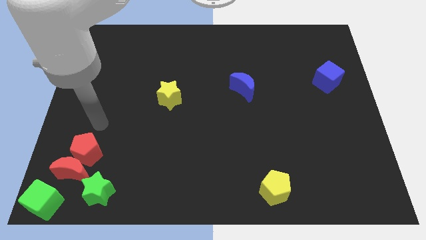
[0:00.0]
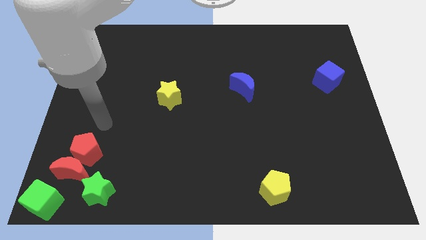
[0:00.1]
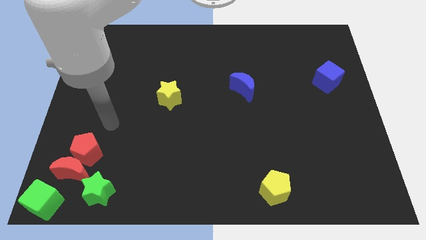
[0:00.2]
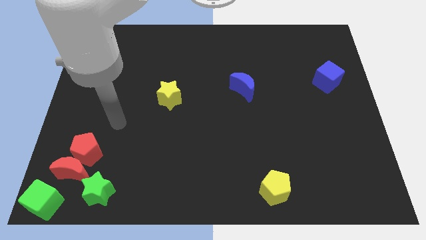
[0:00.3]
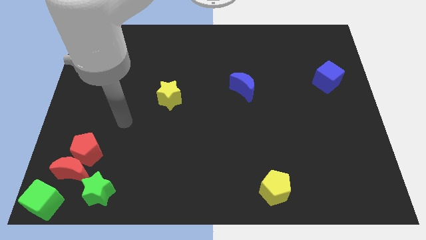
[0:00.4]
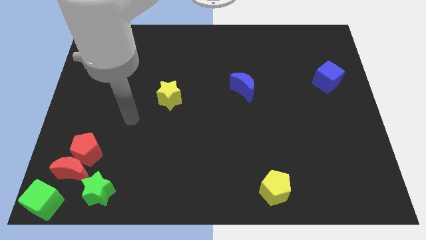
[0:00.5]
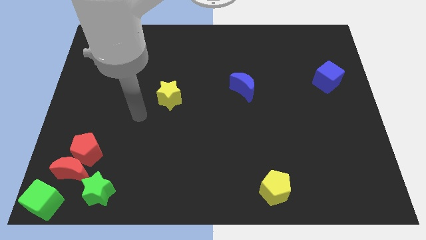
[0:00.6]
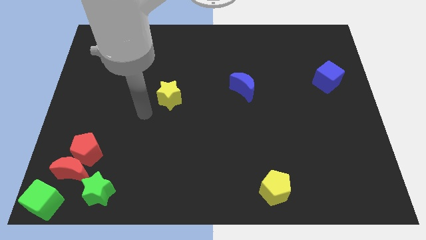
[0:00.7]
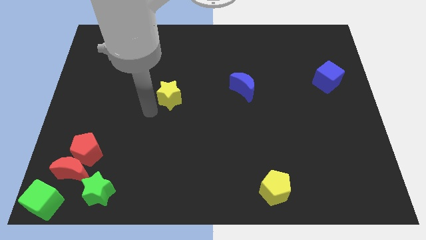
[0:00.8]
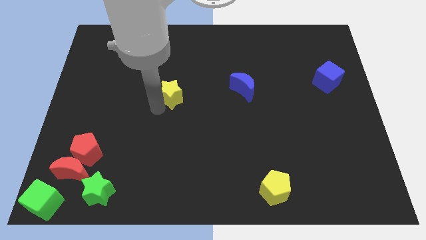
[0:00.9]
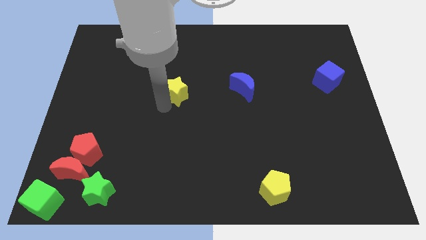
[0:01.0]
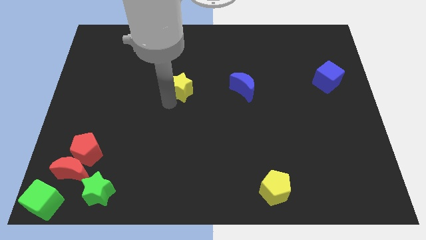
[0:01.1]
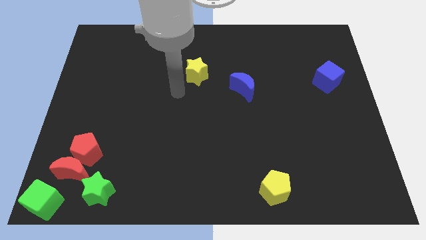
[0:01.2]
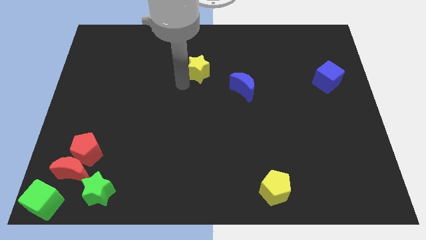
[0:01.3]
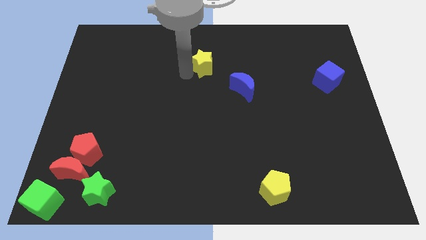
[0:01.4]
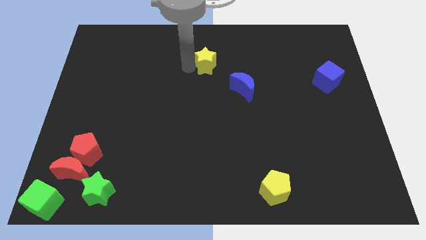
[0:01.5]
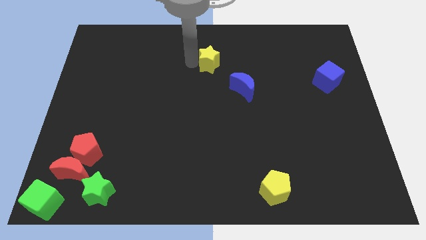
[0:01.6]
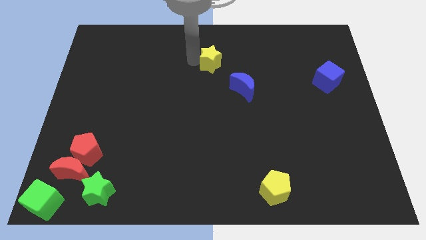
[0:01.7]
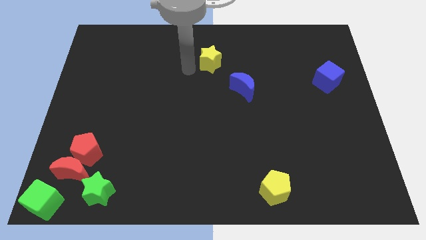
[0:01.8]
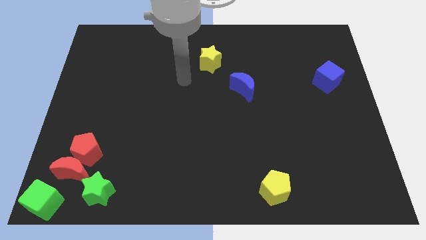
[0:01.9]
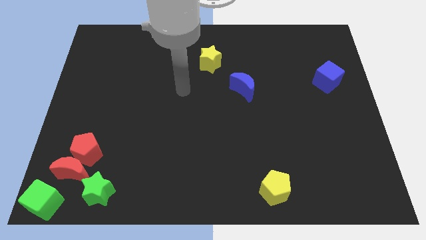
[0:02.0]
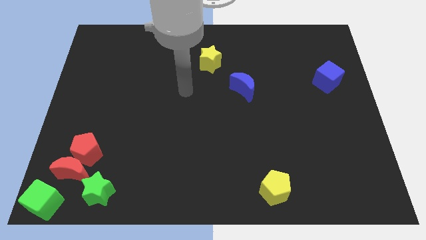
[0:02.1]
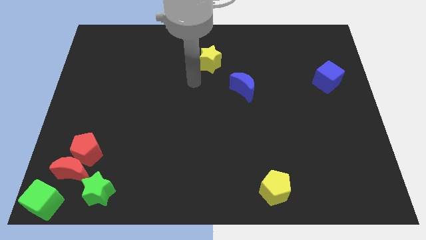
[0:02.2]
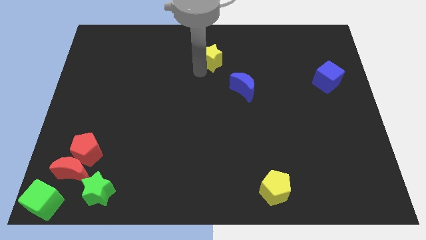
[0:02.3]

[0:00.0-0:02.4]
push the yellow star towards the top side

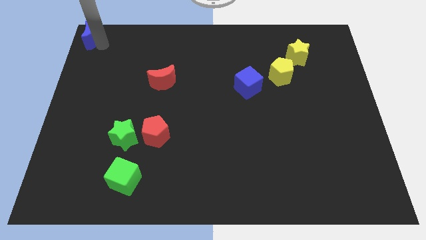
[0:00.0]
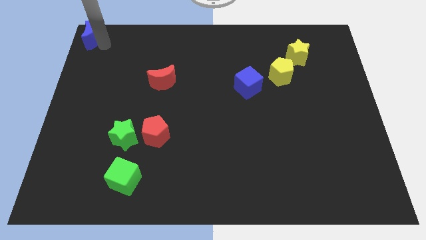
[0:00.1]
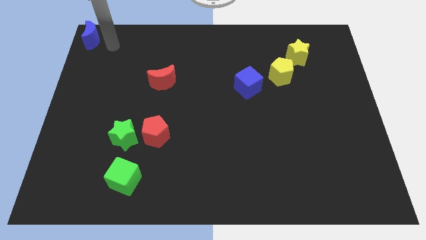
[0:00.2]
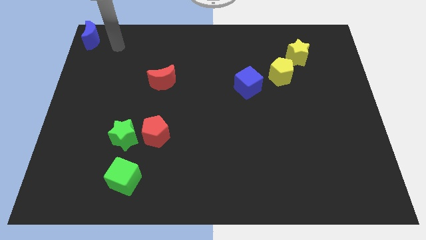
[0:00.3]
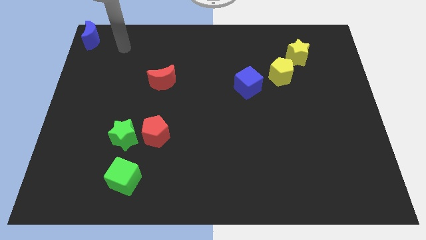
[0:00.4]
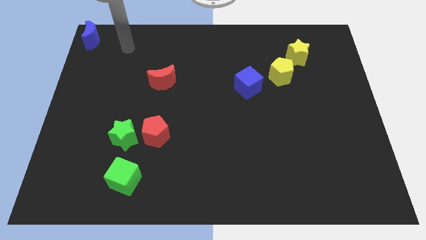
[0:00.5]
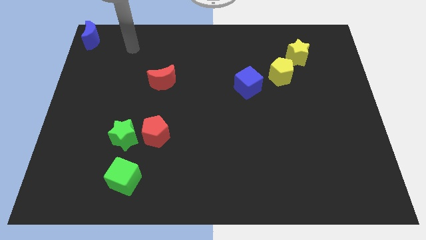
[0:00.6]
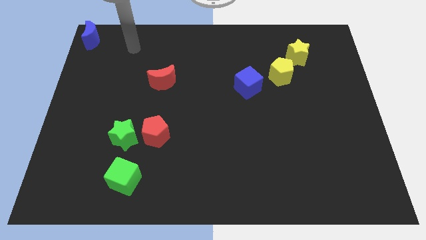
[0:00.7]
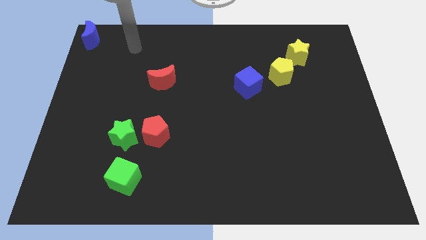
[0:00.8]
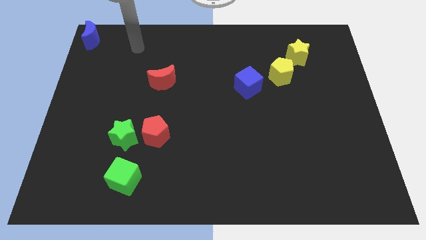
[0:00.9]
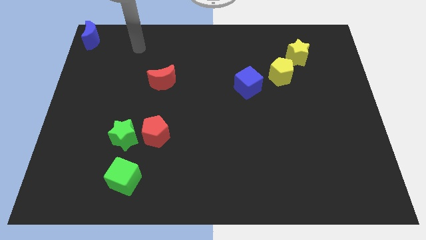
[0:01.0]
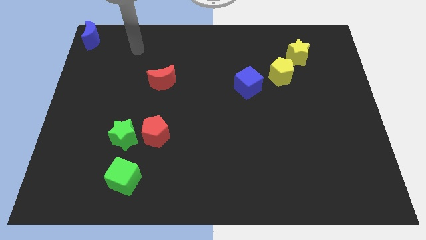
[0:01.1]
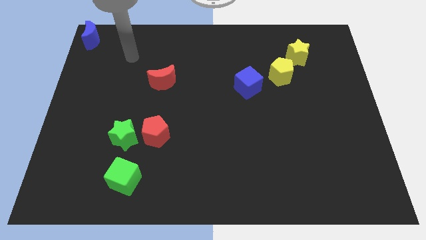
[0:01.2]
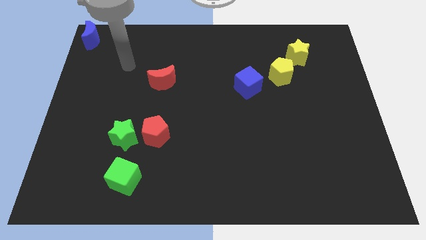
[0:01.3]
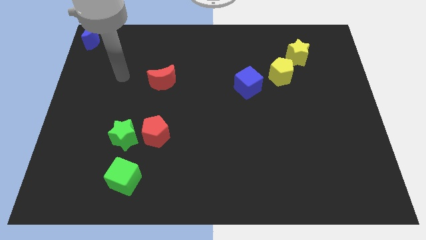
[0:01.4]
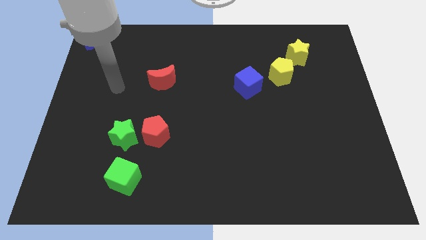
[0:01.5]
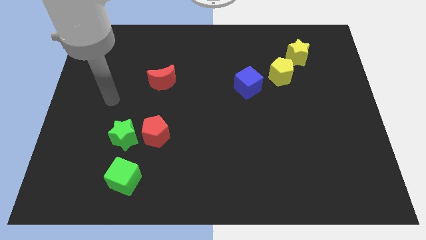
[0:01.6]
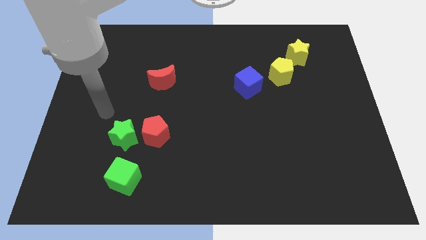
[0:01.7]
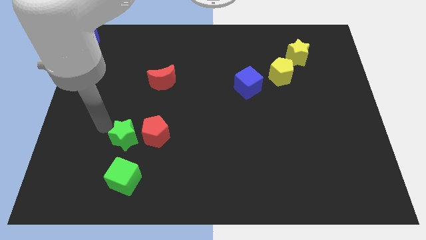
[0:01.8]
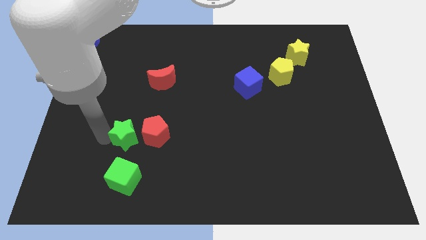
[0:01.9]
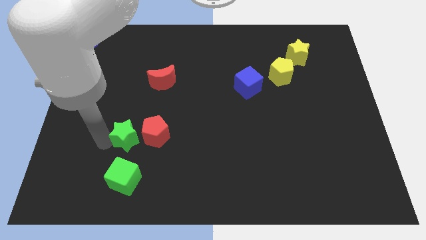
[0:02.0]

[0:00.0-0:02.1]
move the arm left to the green star

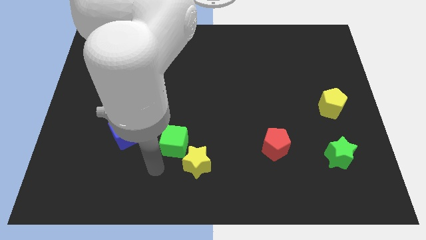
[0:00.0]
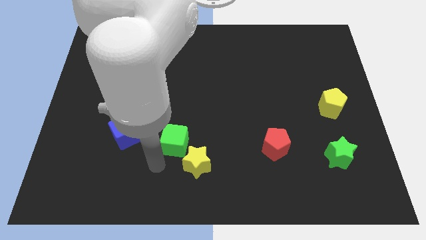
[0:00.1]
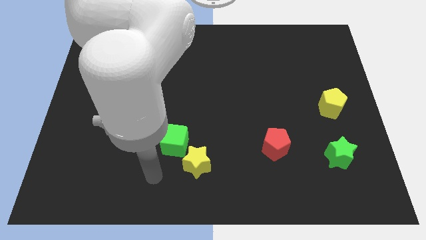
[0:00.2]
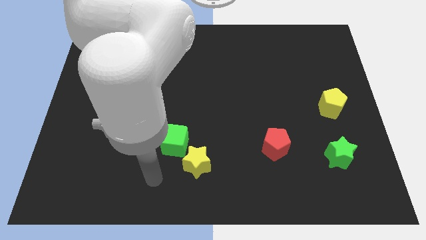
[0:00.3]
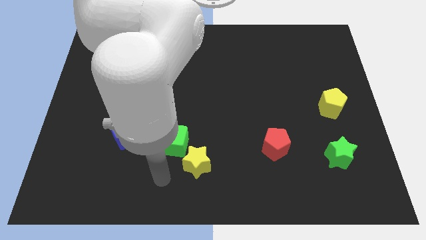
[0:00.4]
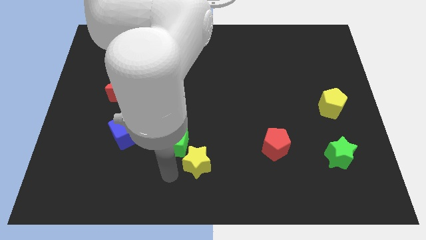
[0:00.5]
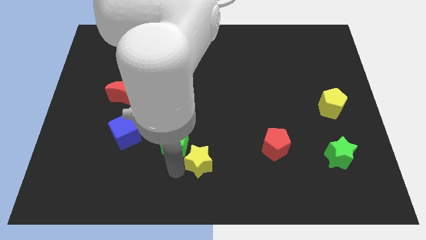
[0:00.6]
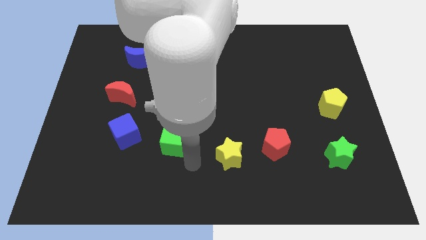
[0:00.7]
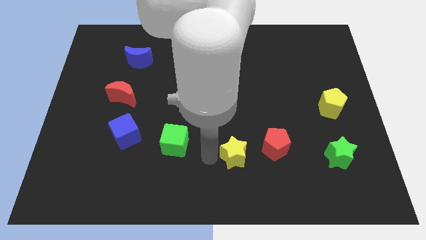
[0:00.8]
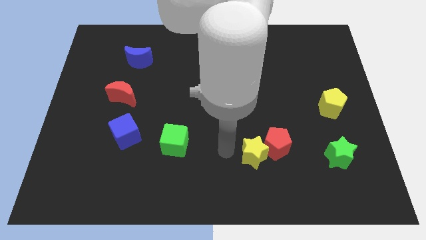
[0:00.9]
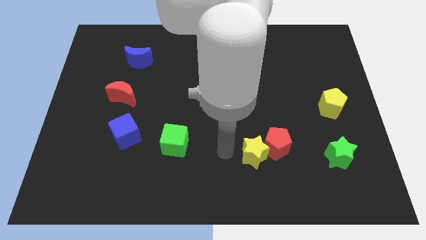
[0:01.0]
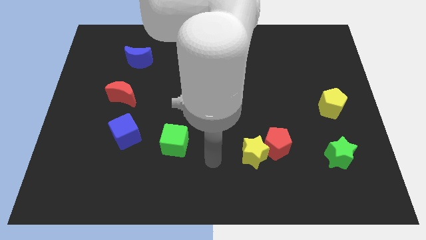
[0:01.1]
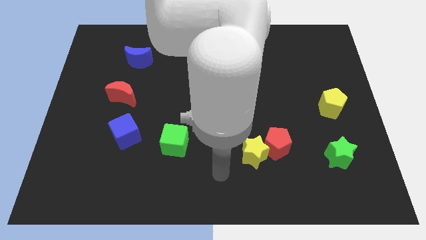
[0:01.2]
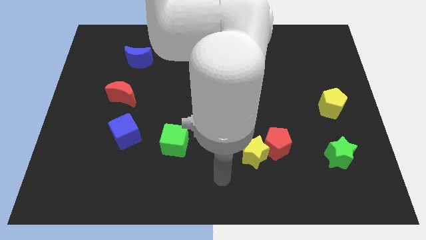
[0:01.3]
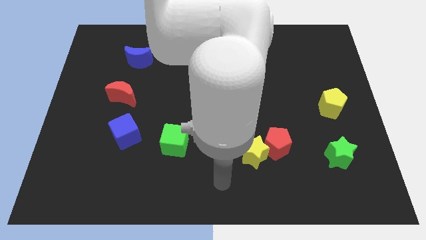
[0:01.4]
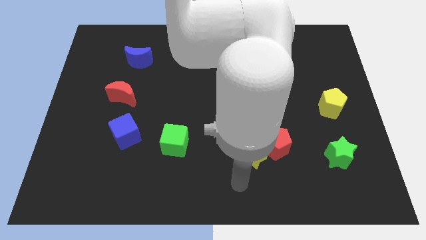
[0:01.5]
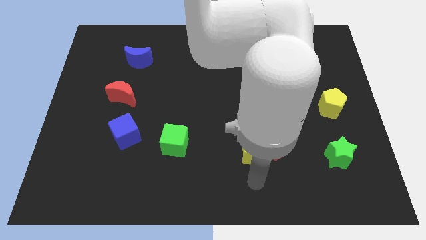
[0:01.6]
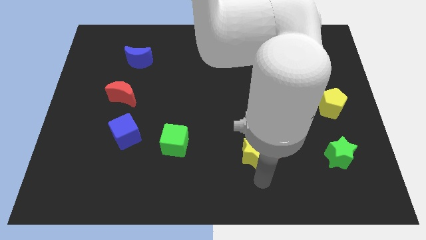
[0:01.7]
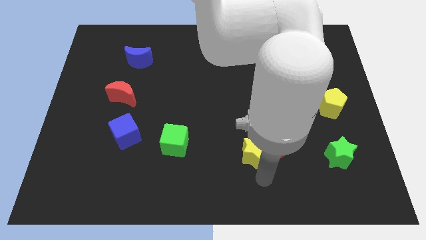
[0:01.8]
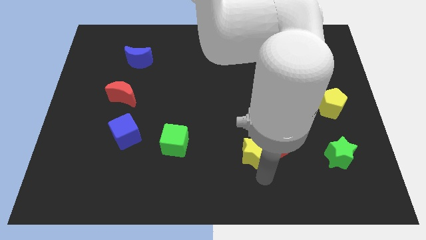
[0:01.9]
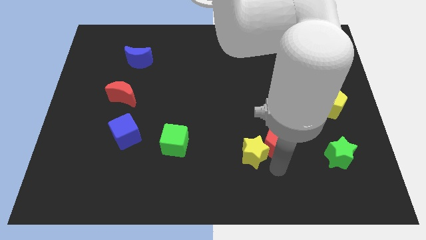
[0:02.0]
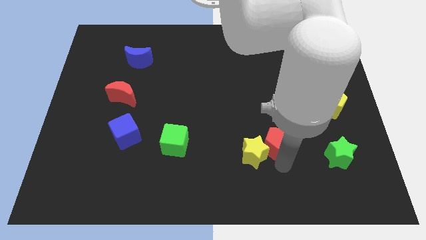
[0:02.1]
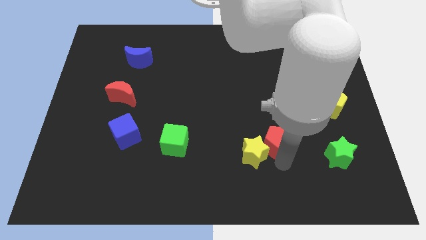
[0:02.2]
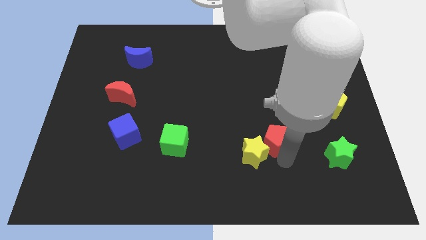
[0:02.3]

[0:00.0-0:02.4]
move the yellow star into the red pentagon

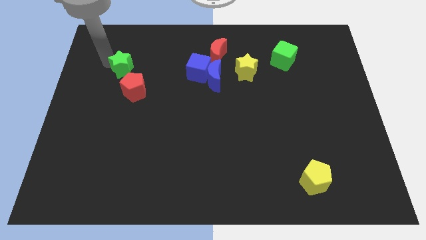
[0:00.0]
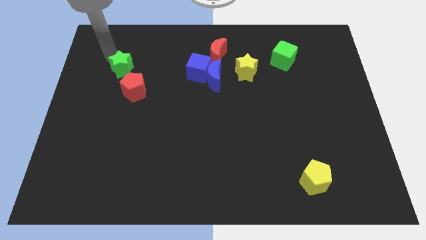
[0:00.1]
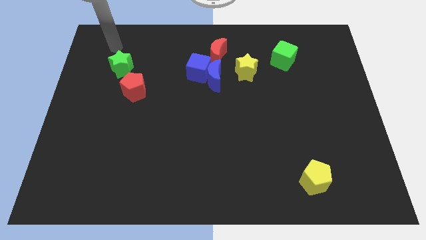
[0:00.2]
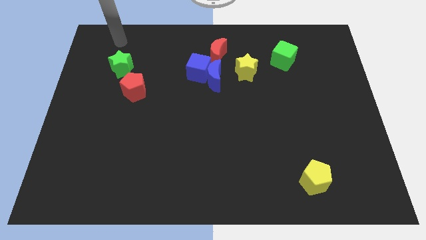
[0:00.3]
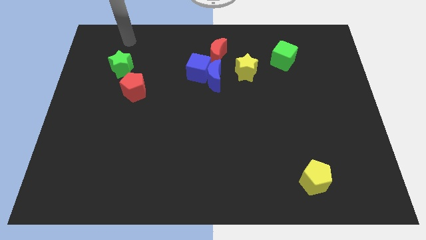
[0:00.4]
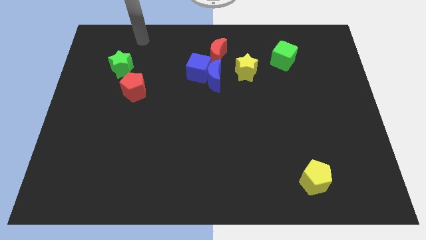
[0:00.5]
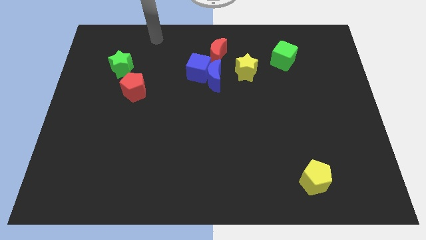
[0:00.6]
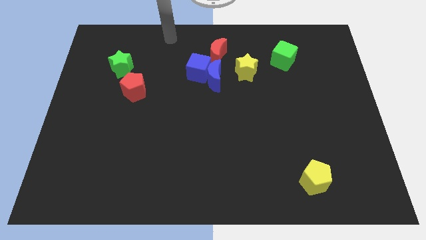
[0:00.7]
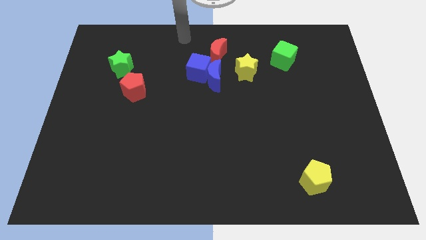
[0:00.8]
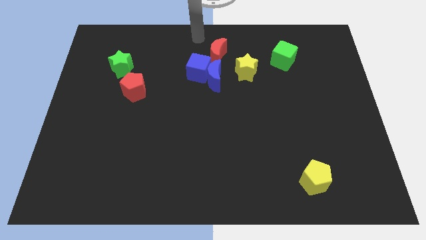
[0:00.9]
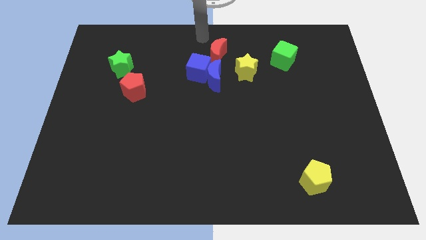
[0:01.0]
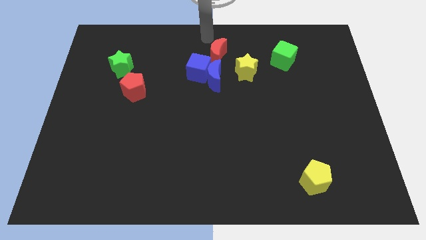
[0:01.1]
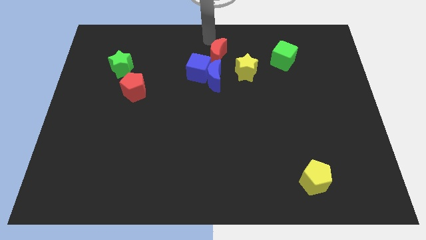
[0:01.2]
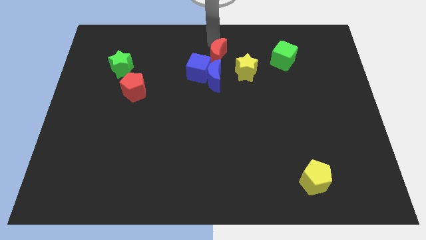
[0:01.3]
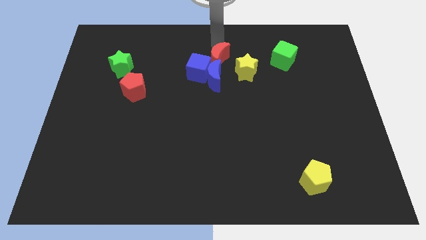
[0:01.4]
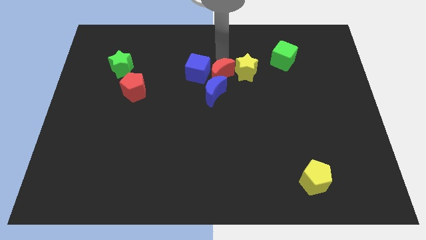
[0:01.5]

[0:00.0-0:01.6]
move red moon above the blue moon

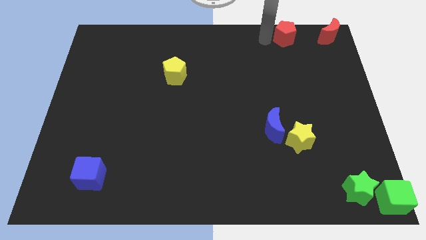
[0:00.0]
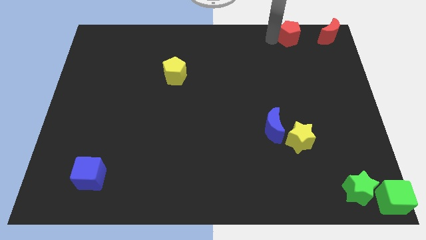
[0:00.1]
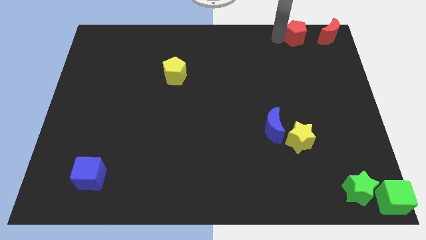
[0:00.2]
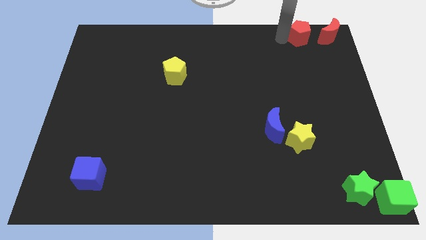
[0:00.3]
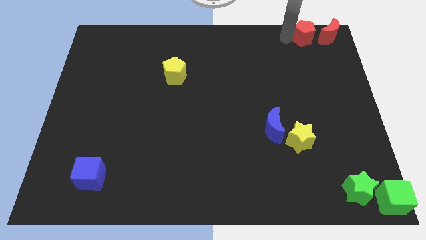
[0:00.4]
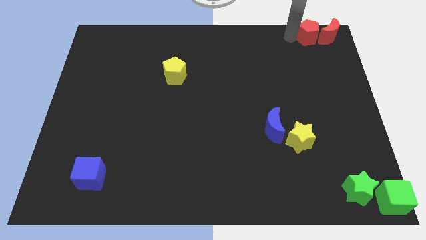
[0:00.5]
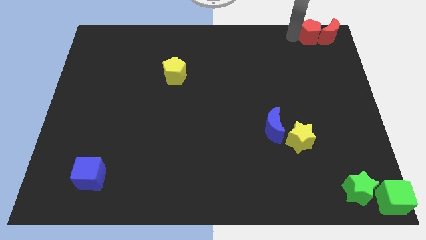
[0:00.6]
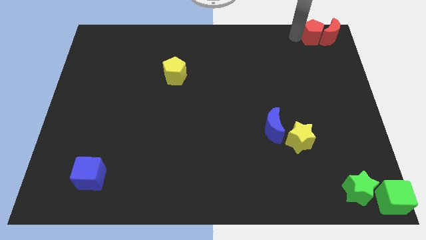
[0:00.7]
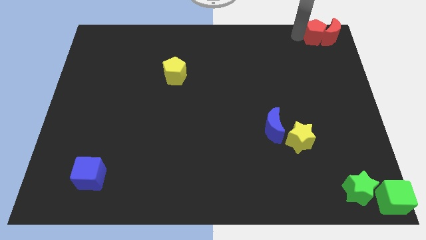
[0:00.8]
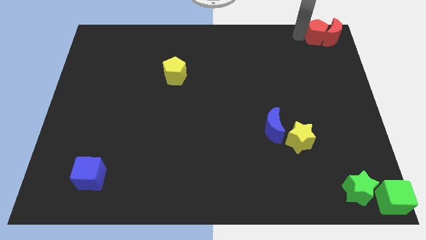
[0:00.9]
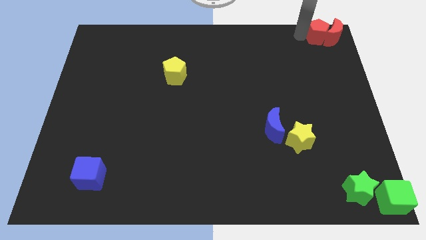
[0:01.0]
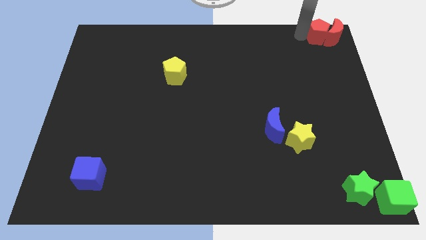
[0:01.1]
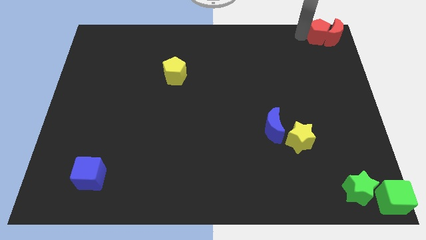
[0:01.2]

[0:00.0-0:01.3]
slide the red pentagon into the red crescent
